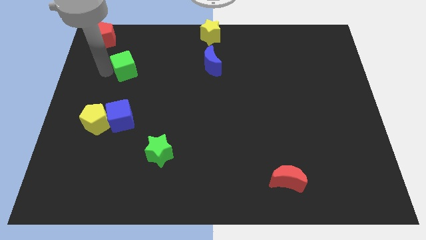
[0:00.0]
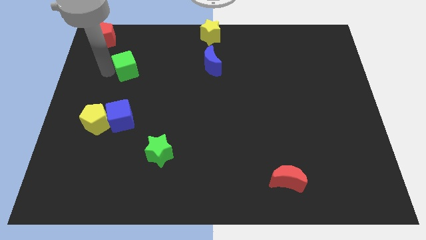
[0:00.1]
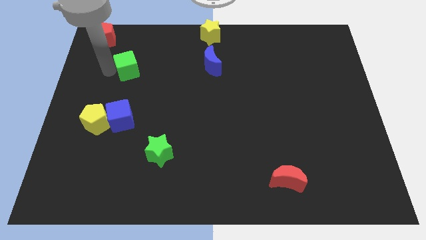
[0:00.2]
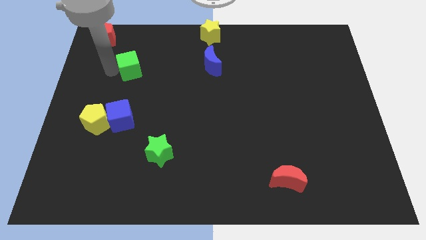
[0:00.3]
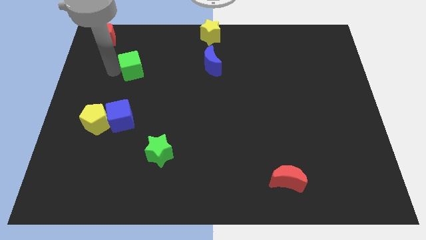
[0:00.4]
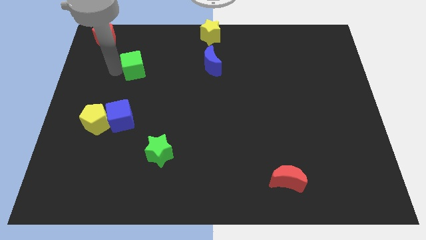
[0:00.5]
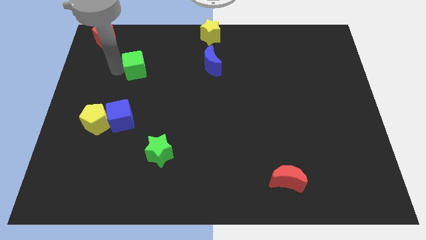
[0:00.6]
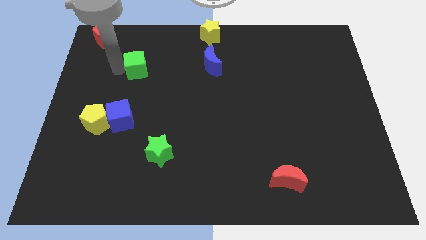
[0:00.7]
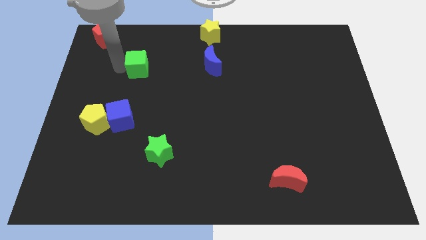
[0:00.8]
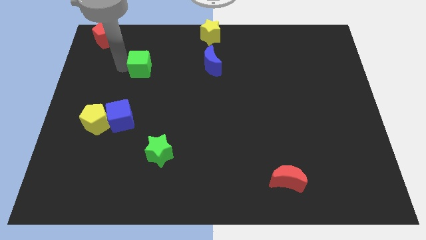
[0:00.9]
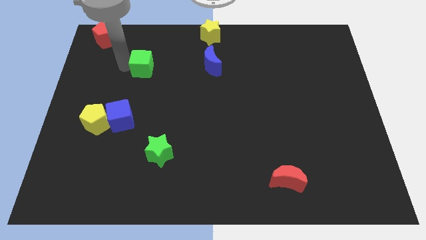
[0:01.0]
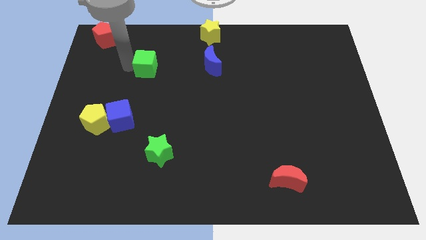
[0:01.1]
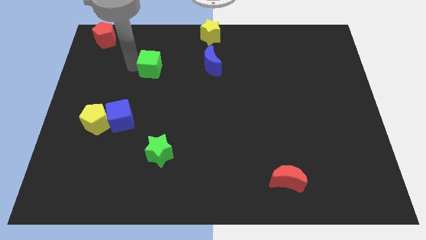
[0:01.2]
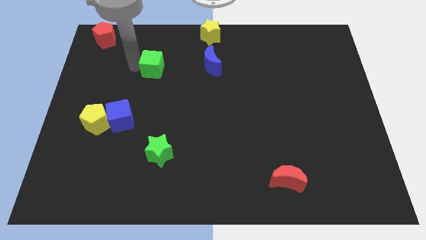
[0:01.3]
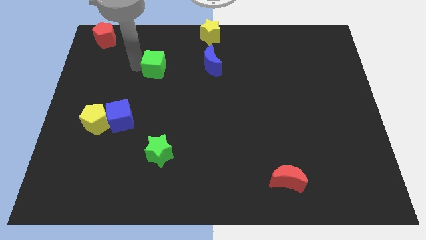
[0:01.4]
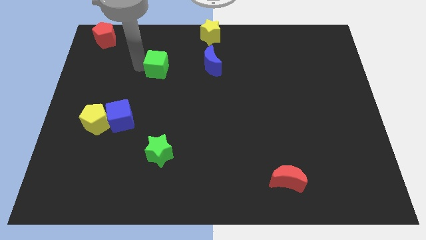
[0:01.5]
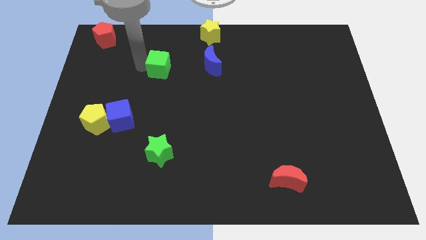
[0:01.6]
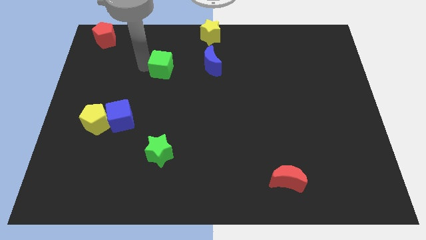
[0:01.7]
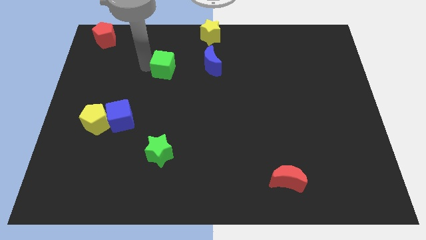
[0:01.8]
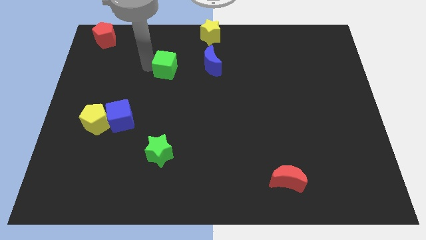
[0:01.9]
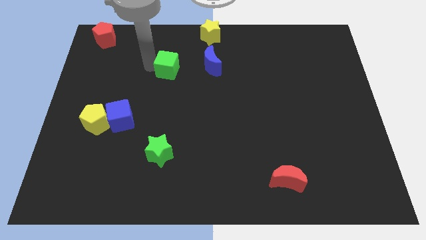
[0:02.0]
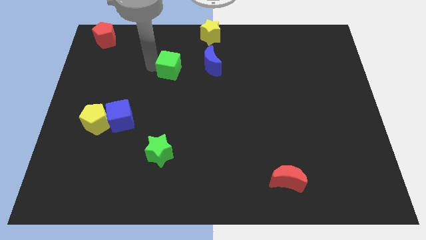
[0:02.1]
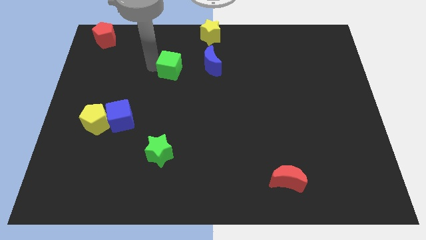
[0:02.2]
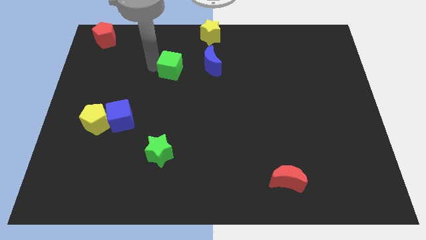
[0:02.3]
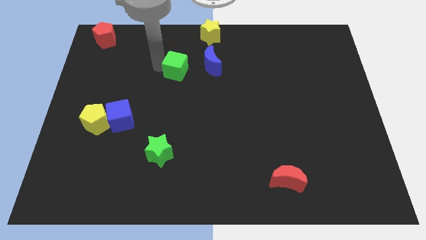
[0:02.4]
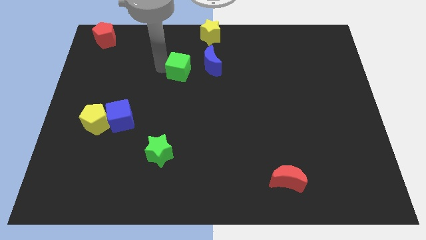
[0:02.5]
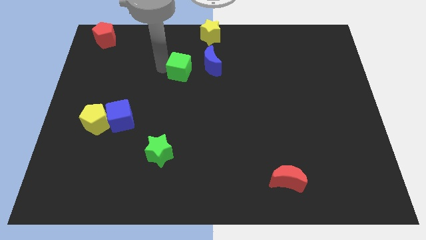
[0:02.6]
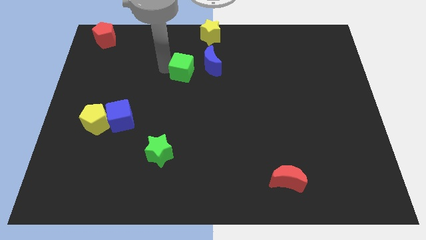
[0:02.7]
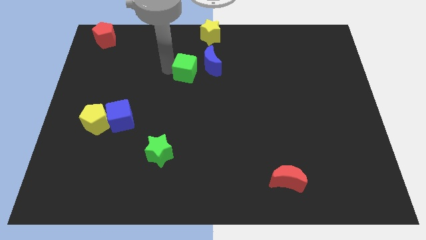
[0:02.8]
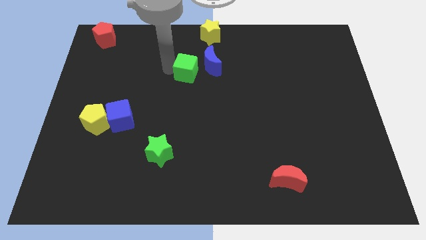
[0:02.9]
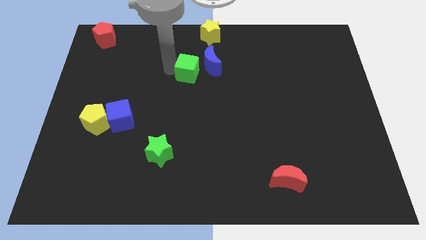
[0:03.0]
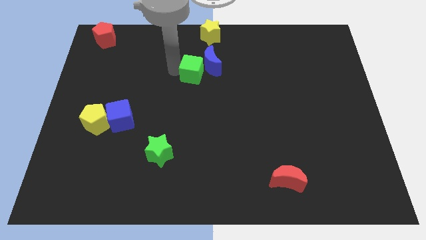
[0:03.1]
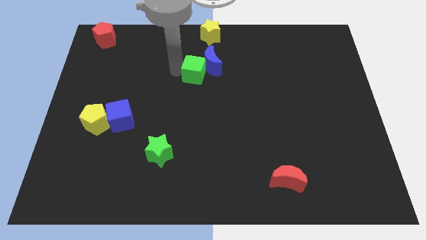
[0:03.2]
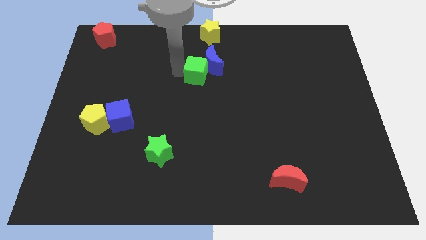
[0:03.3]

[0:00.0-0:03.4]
move the green cube into the blue moon

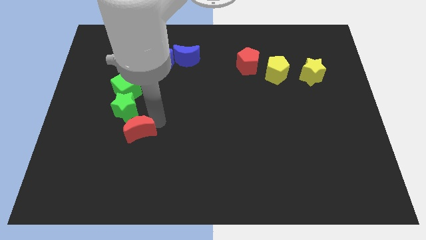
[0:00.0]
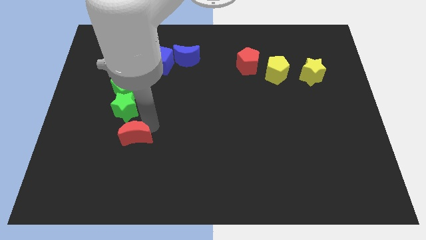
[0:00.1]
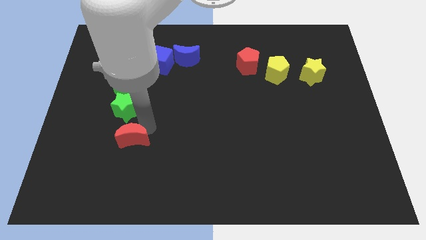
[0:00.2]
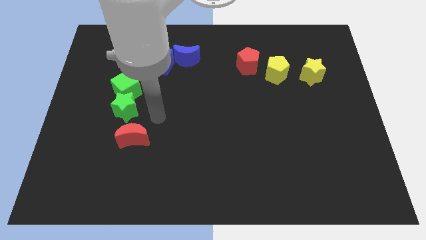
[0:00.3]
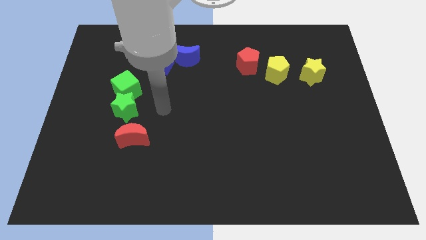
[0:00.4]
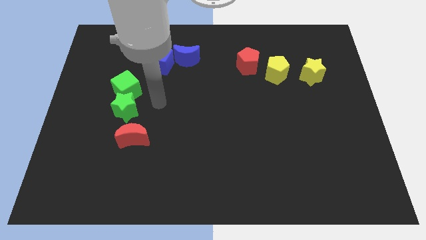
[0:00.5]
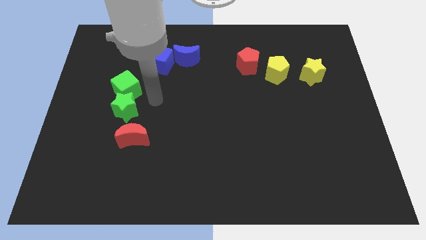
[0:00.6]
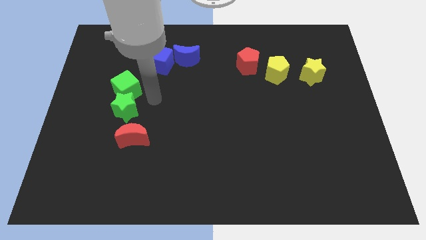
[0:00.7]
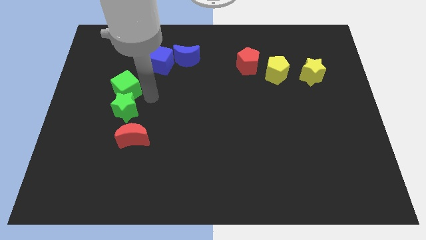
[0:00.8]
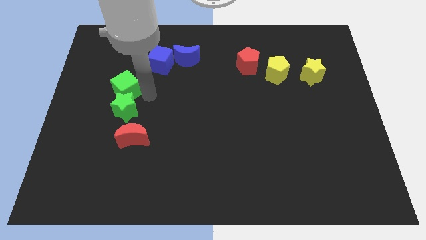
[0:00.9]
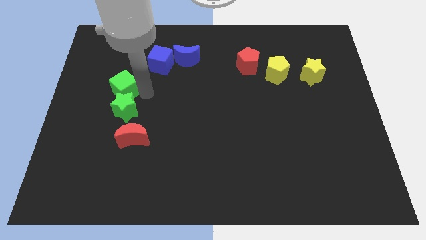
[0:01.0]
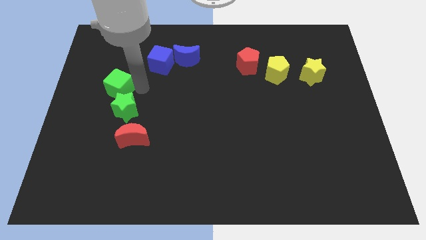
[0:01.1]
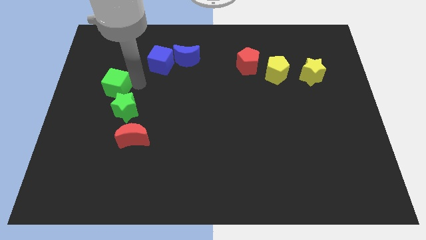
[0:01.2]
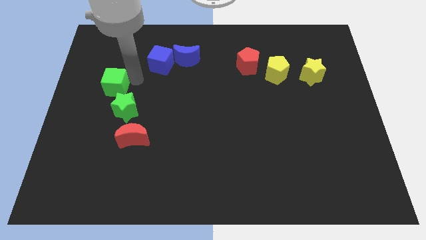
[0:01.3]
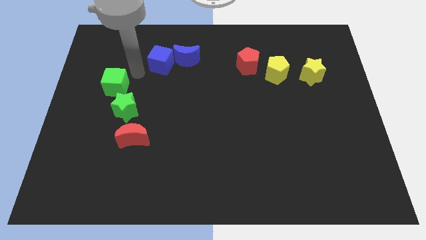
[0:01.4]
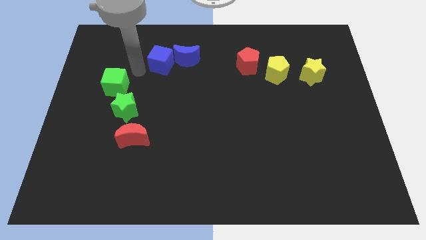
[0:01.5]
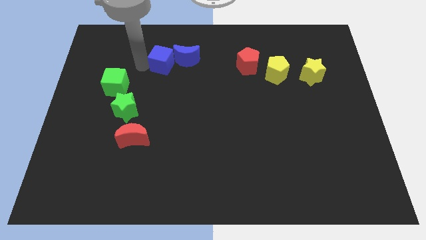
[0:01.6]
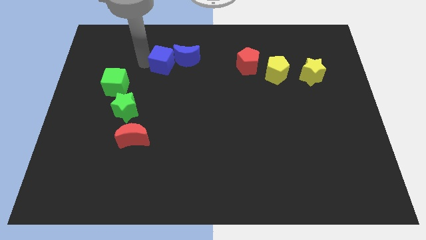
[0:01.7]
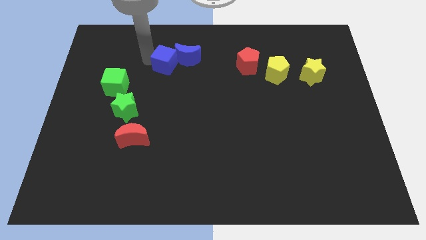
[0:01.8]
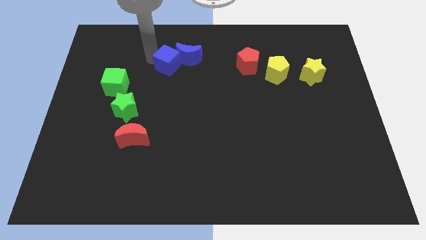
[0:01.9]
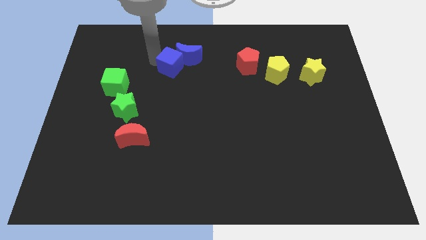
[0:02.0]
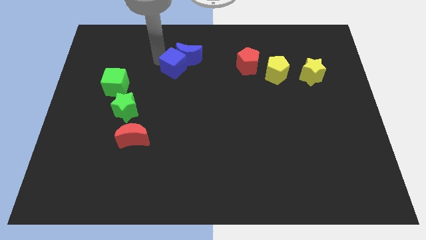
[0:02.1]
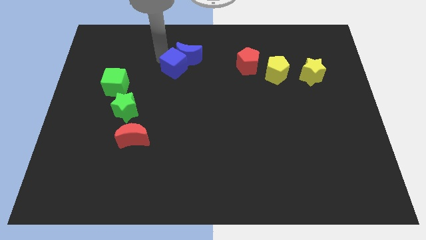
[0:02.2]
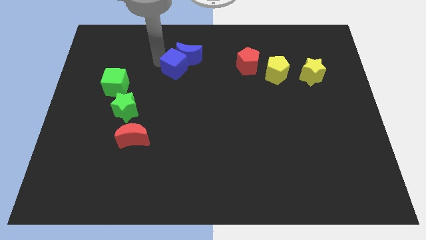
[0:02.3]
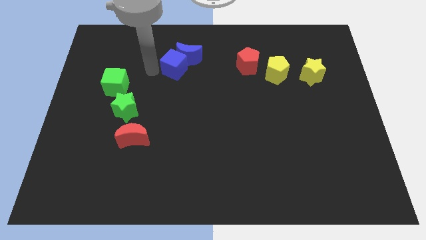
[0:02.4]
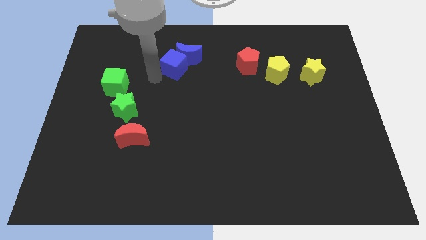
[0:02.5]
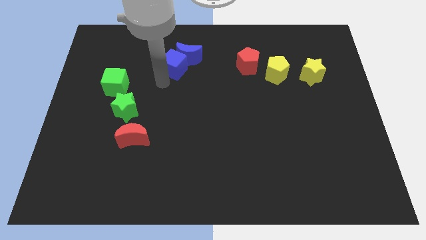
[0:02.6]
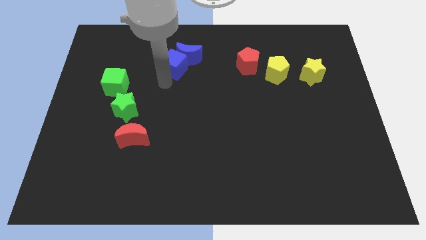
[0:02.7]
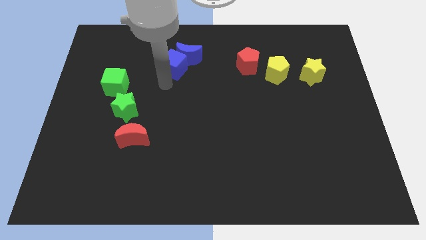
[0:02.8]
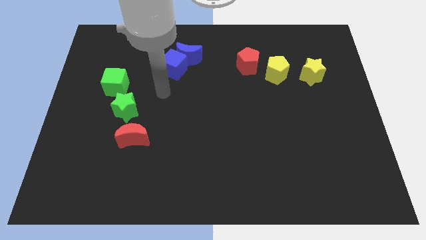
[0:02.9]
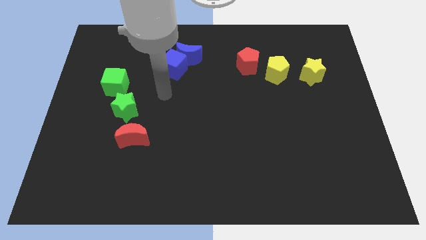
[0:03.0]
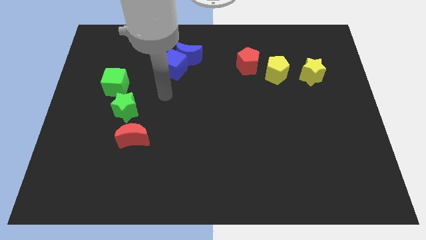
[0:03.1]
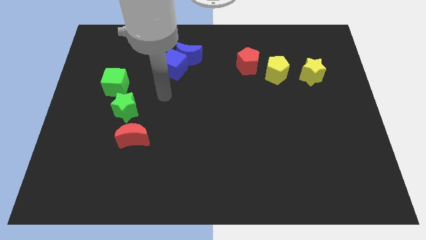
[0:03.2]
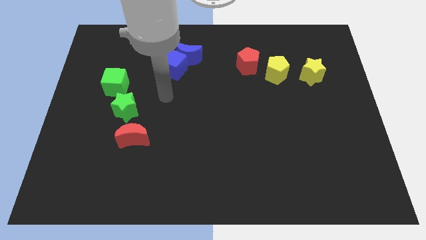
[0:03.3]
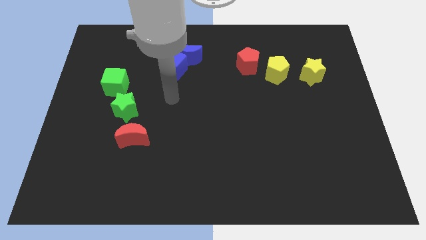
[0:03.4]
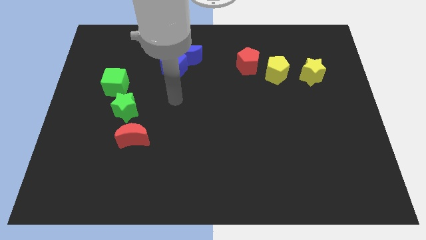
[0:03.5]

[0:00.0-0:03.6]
slightly push the green cube towards right

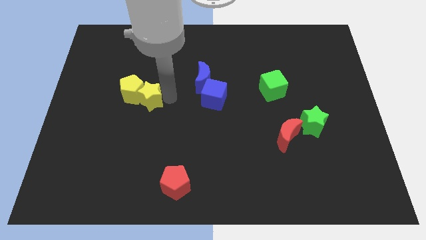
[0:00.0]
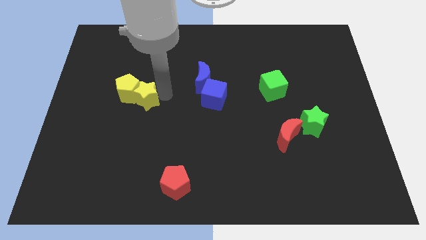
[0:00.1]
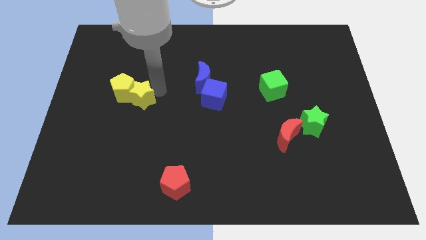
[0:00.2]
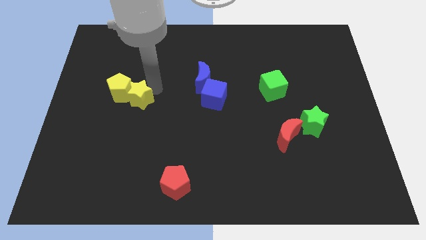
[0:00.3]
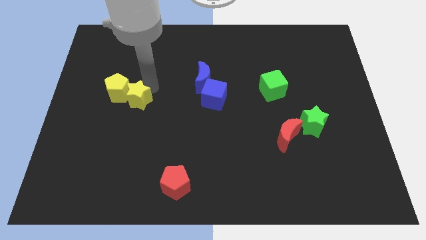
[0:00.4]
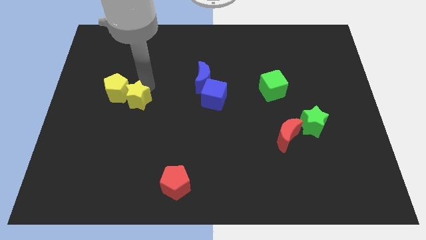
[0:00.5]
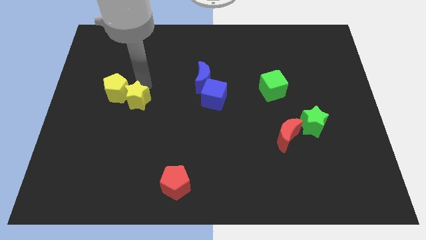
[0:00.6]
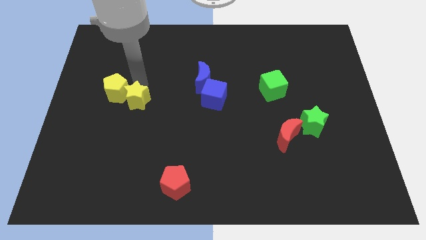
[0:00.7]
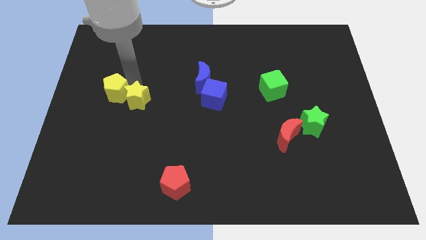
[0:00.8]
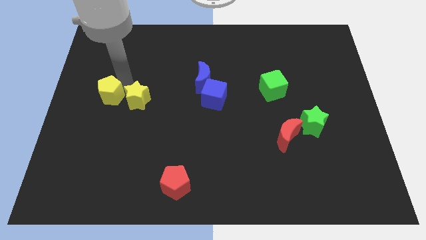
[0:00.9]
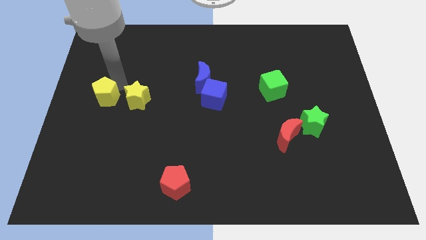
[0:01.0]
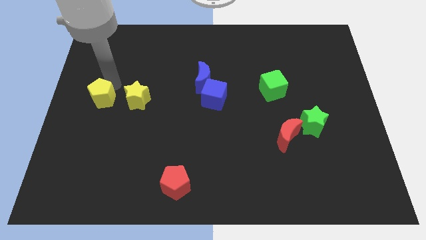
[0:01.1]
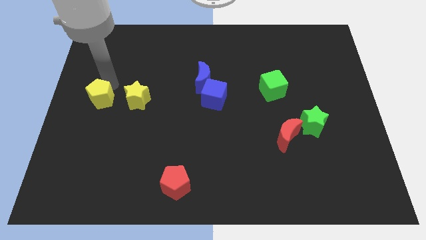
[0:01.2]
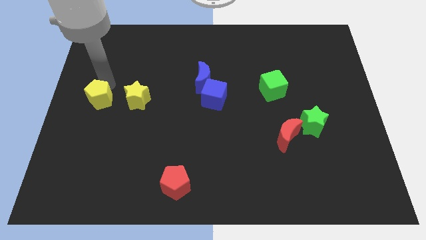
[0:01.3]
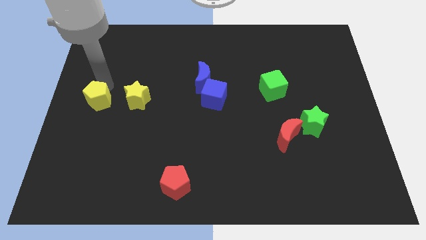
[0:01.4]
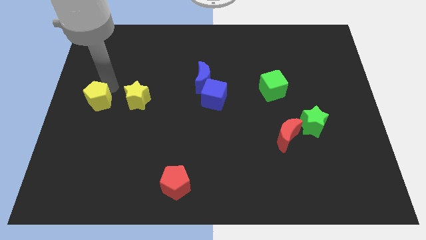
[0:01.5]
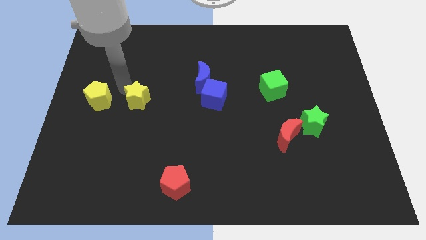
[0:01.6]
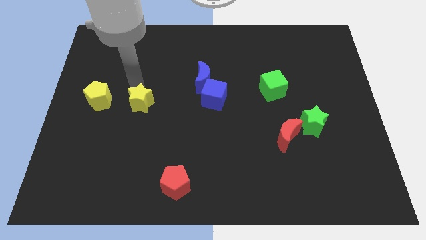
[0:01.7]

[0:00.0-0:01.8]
separate the yellow pentagon from the yellow star

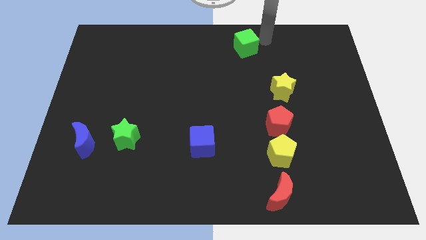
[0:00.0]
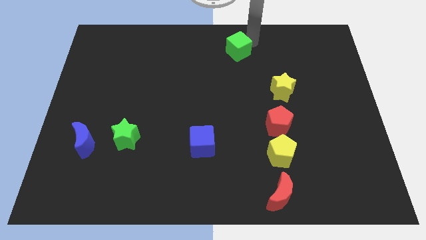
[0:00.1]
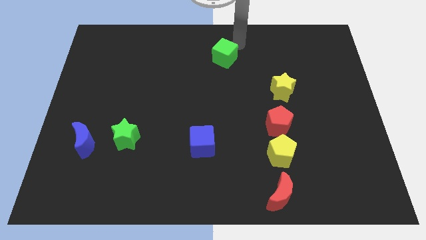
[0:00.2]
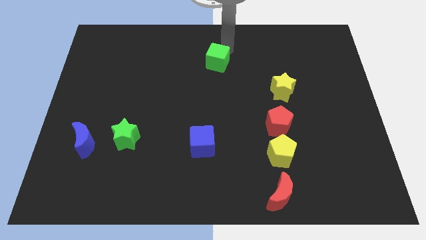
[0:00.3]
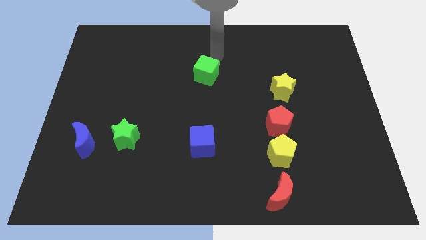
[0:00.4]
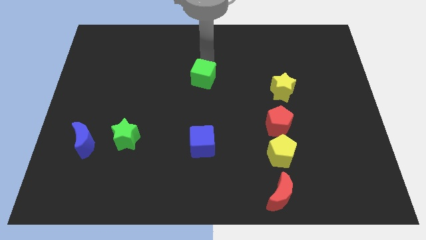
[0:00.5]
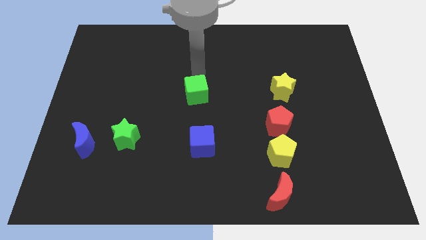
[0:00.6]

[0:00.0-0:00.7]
place green cube above blue cube
